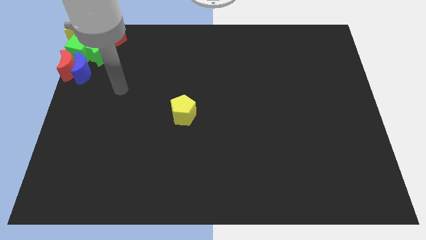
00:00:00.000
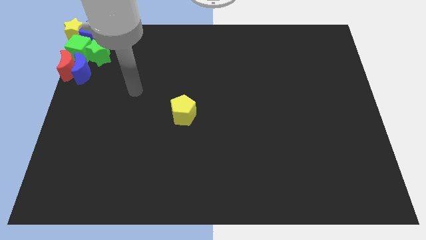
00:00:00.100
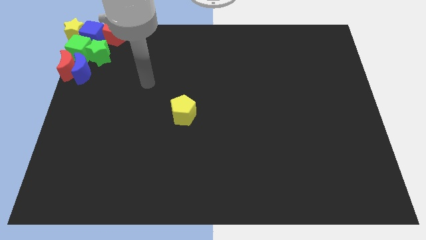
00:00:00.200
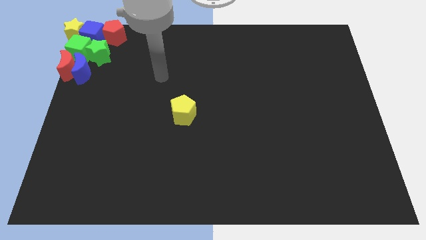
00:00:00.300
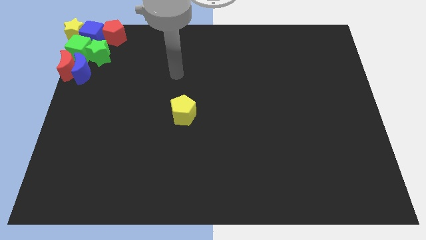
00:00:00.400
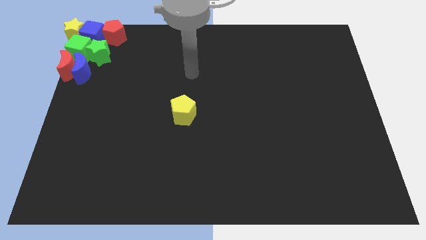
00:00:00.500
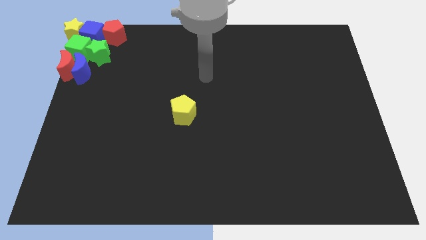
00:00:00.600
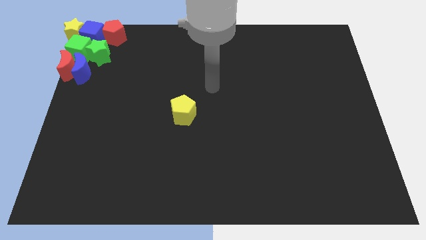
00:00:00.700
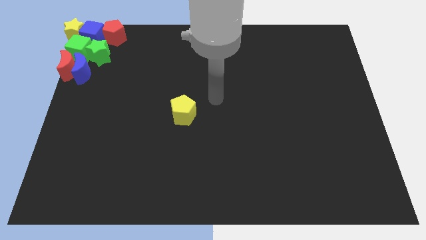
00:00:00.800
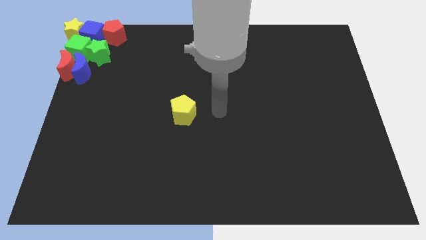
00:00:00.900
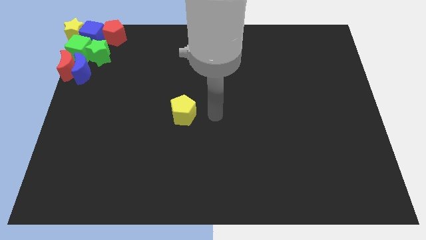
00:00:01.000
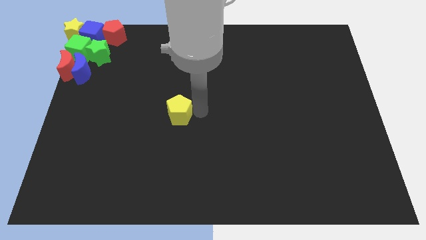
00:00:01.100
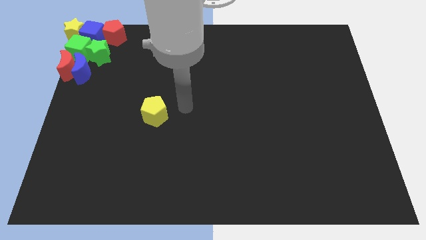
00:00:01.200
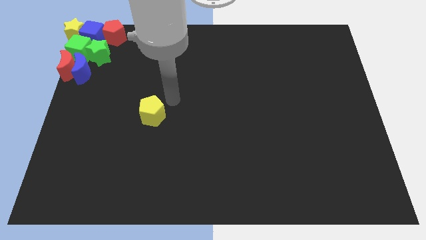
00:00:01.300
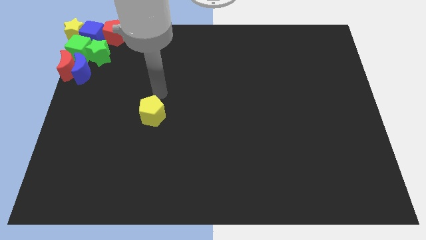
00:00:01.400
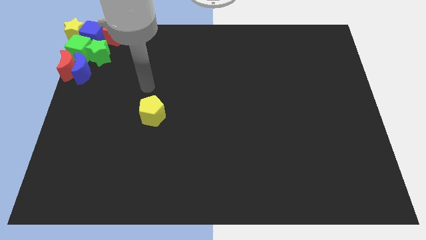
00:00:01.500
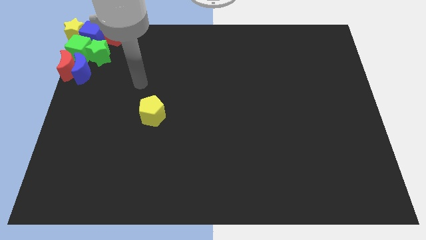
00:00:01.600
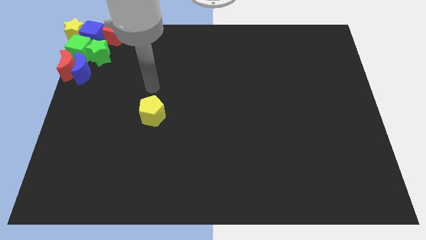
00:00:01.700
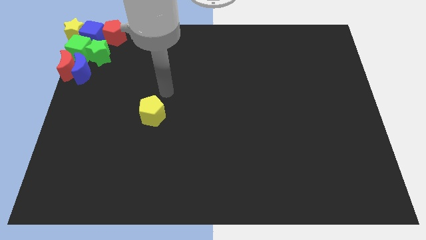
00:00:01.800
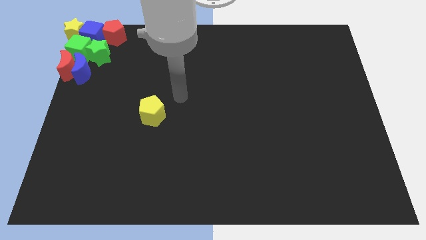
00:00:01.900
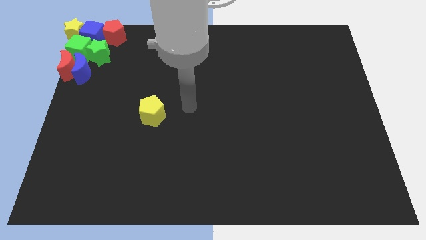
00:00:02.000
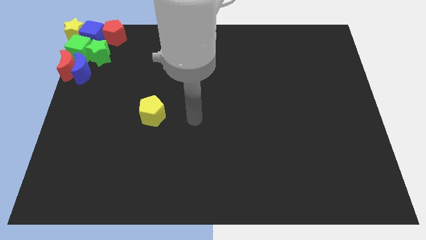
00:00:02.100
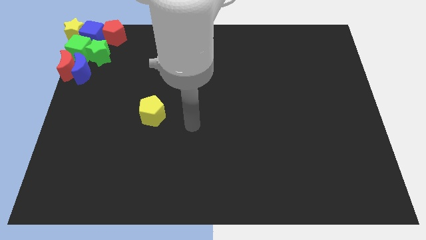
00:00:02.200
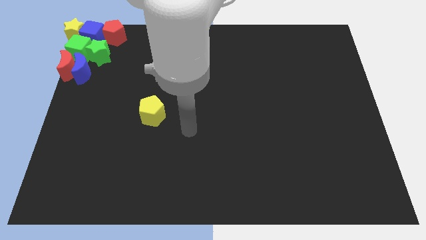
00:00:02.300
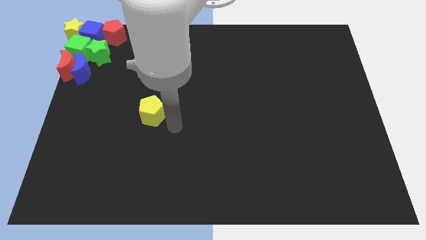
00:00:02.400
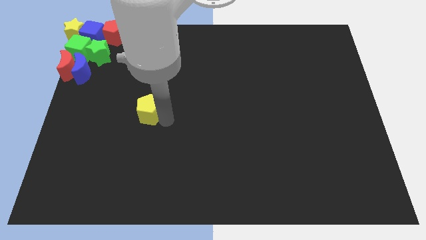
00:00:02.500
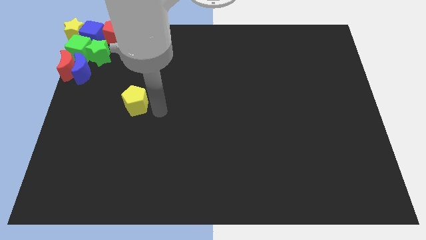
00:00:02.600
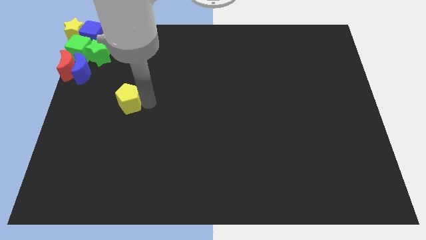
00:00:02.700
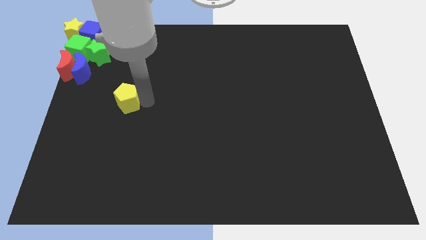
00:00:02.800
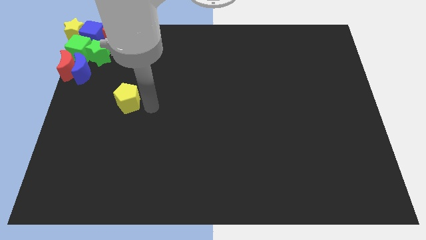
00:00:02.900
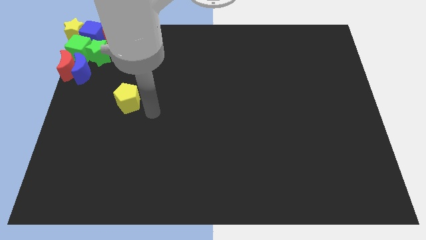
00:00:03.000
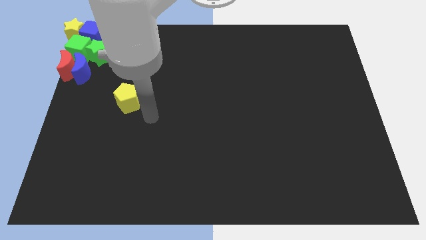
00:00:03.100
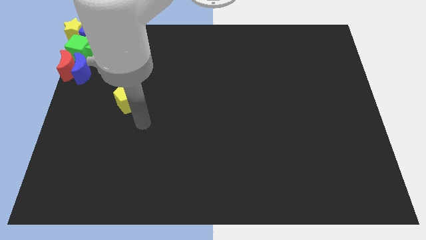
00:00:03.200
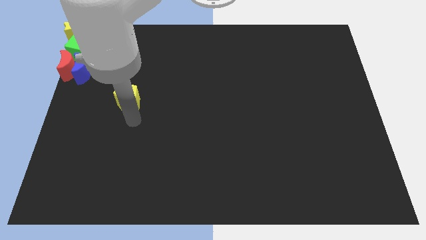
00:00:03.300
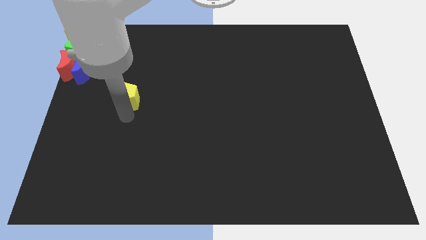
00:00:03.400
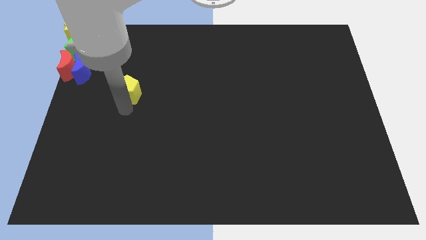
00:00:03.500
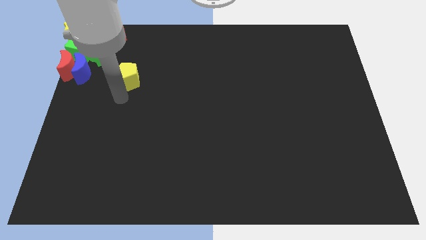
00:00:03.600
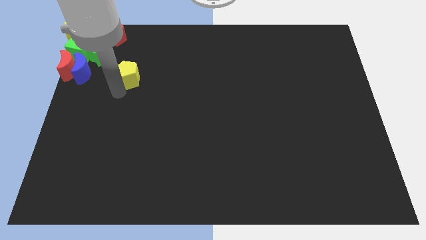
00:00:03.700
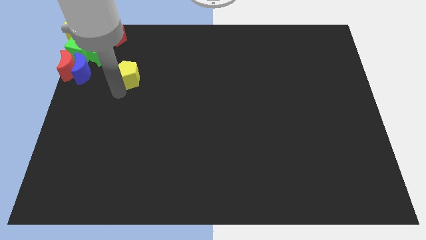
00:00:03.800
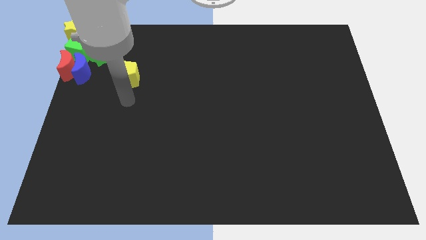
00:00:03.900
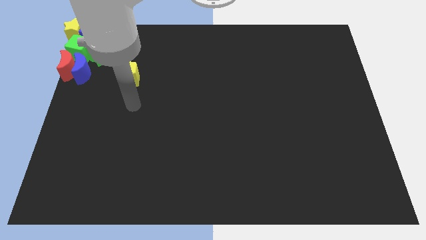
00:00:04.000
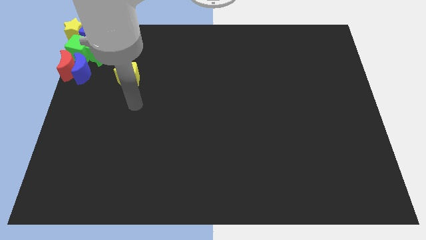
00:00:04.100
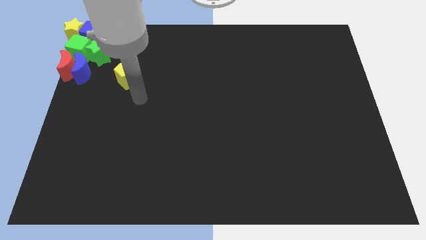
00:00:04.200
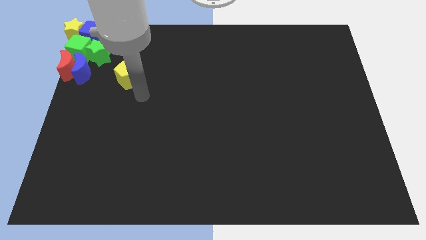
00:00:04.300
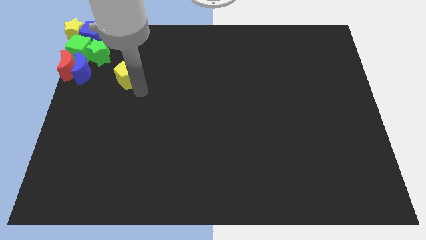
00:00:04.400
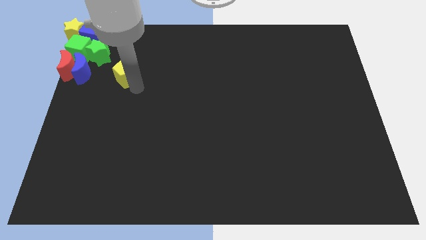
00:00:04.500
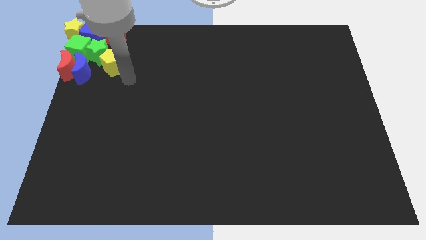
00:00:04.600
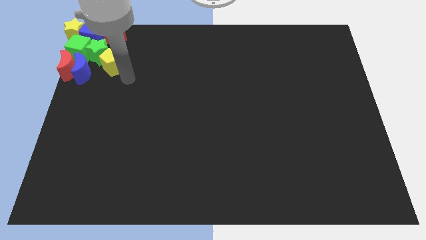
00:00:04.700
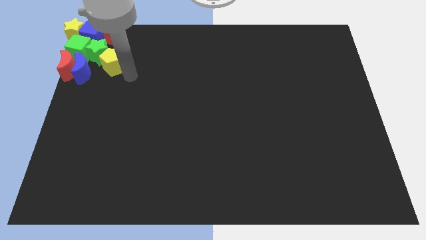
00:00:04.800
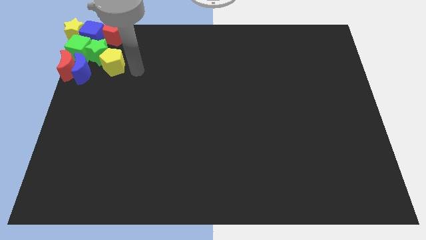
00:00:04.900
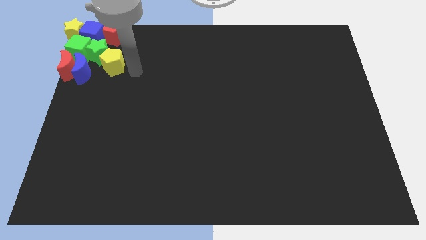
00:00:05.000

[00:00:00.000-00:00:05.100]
move yellow pentagon to the bottom right of green star

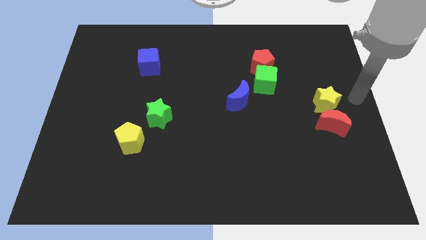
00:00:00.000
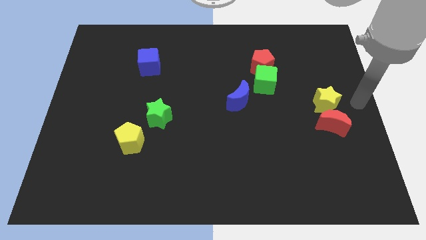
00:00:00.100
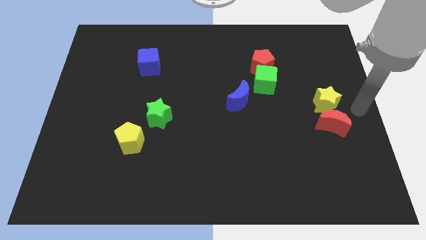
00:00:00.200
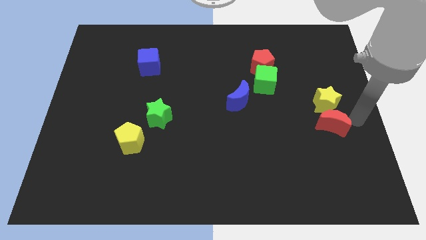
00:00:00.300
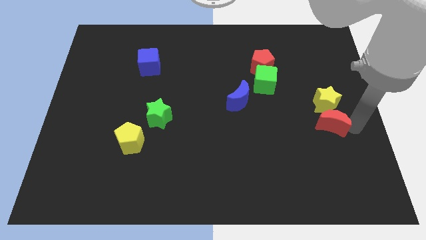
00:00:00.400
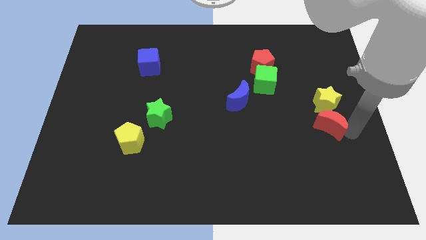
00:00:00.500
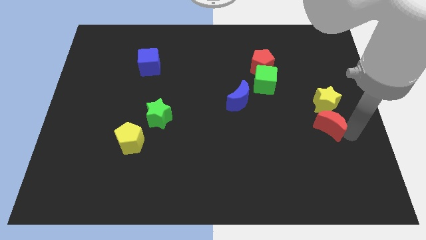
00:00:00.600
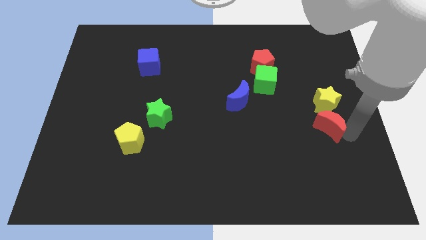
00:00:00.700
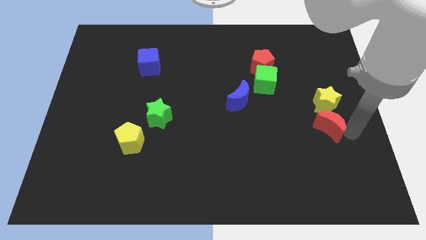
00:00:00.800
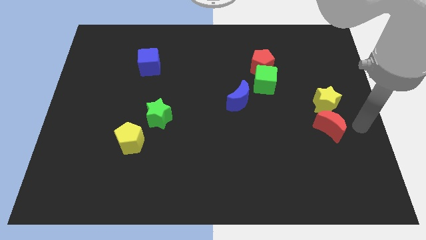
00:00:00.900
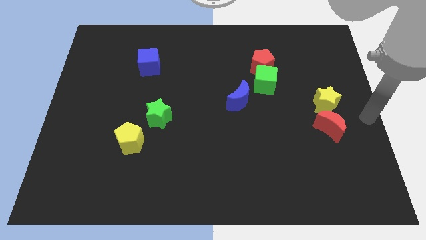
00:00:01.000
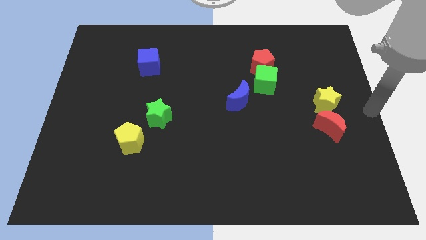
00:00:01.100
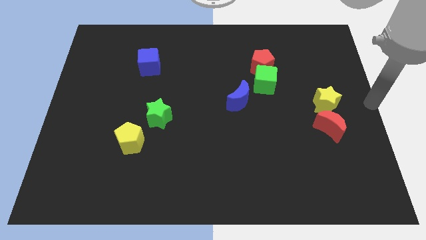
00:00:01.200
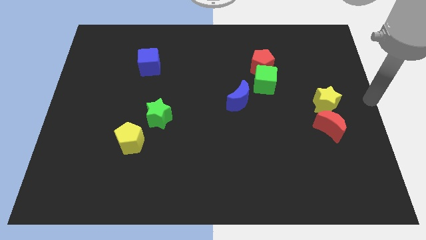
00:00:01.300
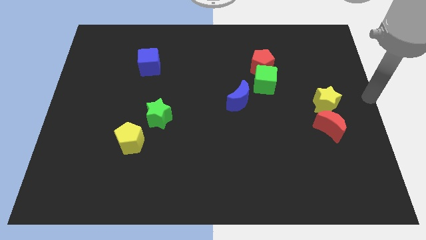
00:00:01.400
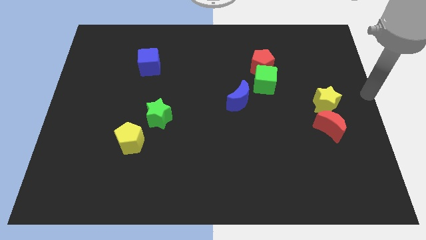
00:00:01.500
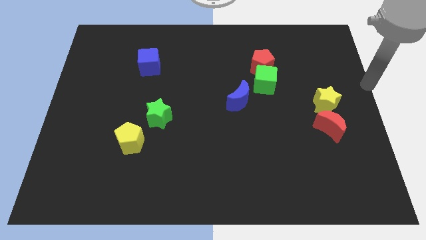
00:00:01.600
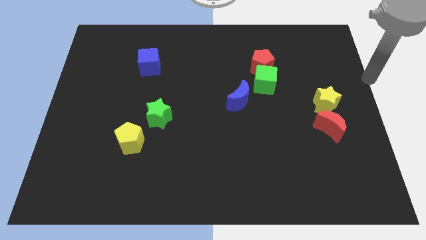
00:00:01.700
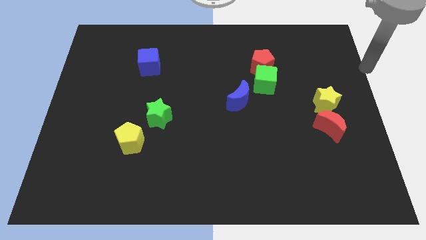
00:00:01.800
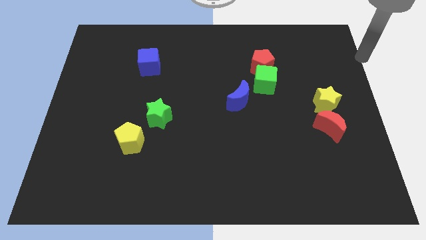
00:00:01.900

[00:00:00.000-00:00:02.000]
move the red crescent below the yellow star

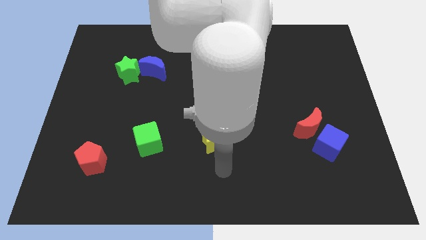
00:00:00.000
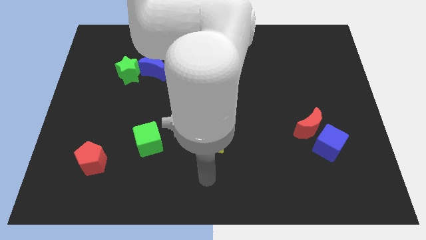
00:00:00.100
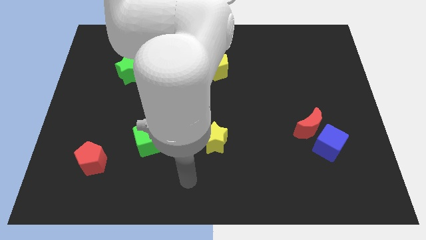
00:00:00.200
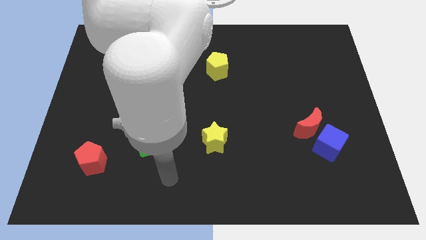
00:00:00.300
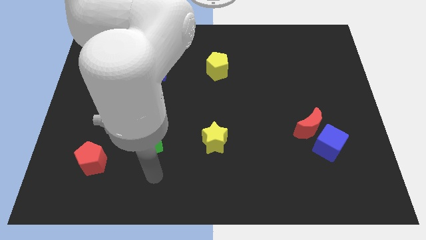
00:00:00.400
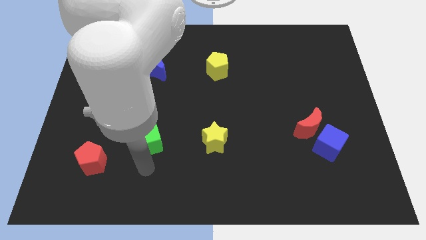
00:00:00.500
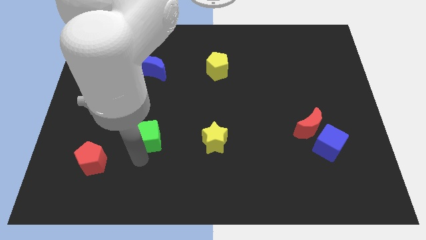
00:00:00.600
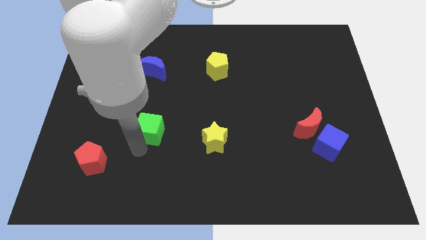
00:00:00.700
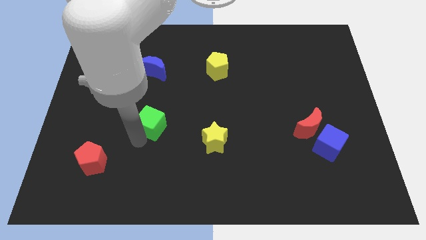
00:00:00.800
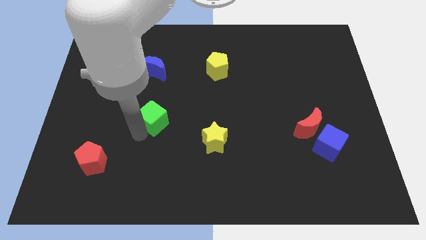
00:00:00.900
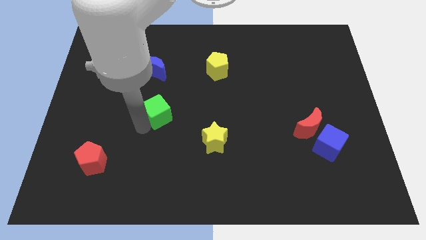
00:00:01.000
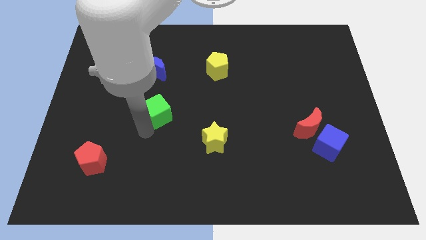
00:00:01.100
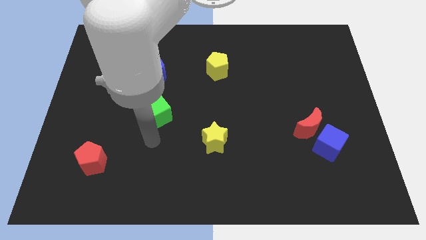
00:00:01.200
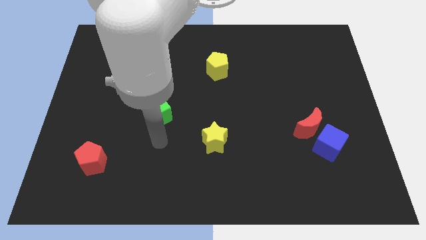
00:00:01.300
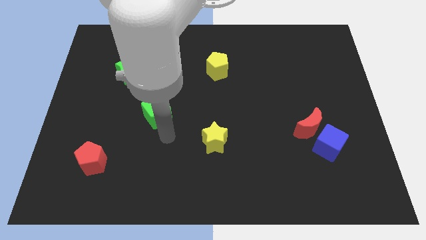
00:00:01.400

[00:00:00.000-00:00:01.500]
slightly move the green cube up

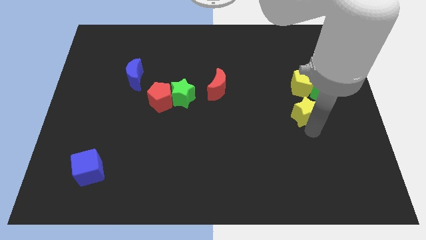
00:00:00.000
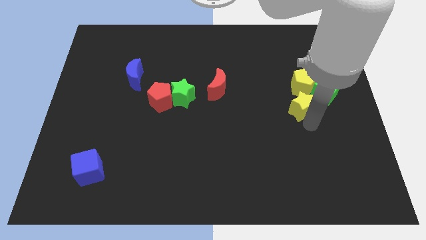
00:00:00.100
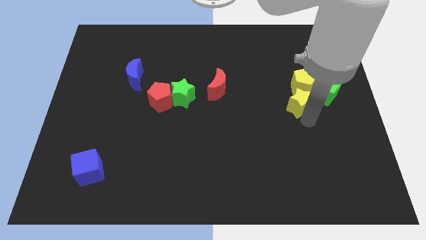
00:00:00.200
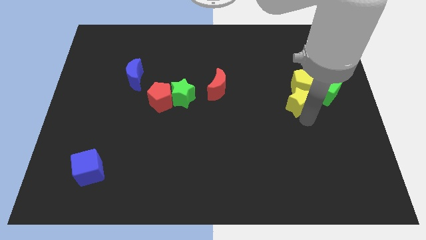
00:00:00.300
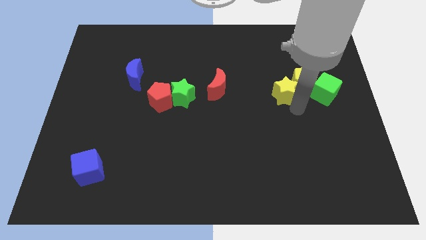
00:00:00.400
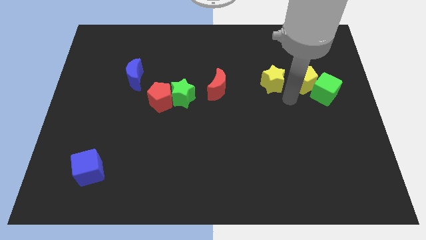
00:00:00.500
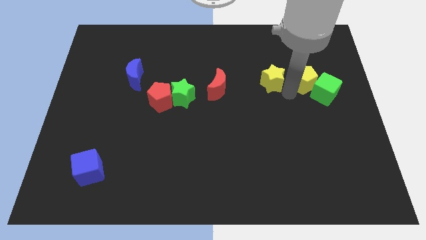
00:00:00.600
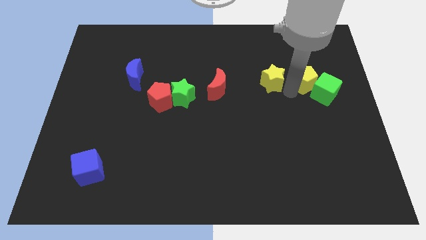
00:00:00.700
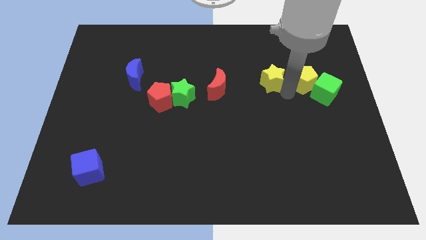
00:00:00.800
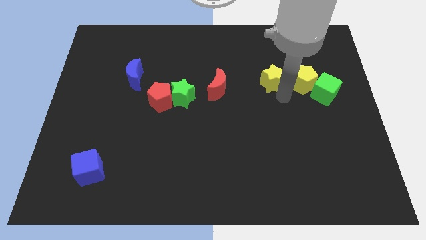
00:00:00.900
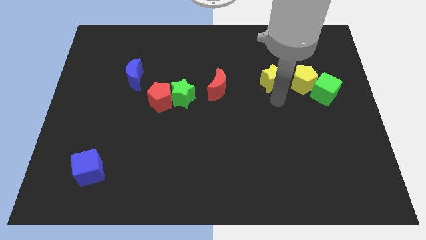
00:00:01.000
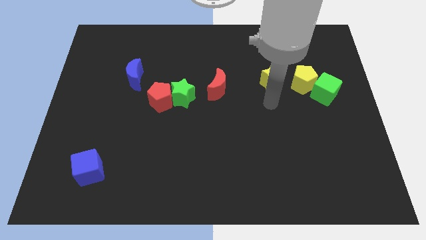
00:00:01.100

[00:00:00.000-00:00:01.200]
place the yellow star to the left side of yellow pentagon
